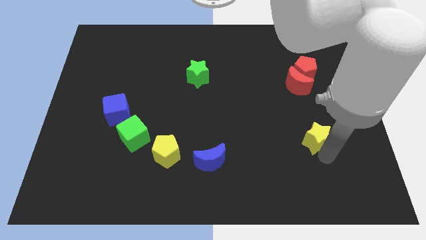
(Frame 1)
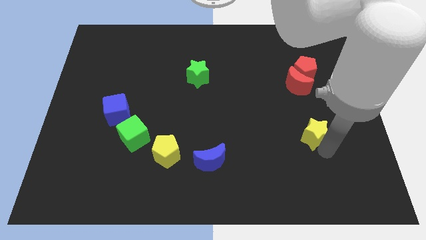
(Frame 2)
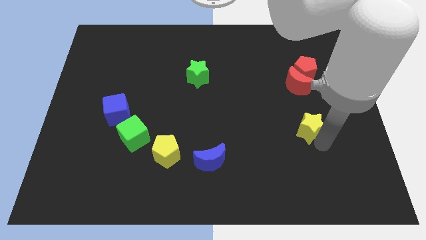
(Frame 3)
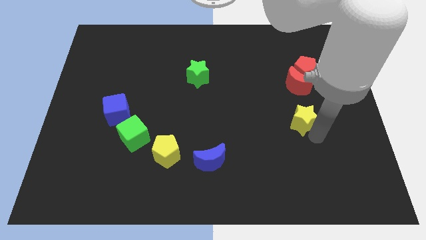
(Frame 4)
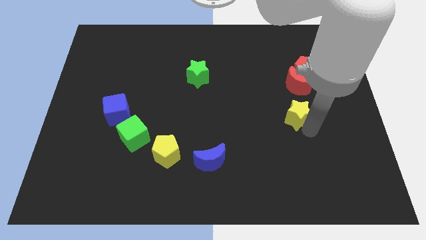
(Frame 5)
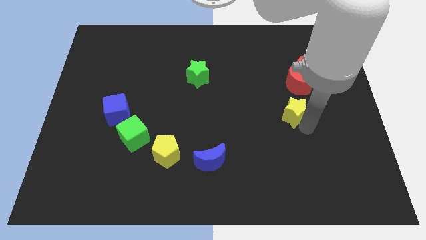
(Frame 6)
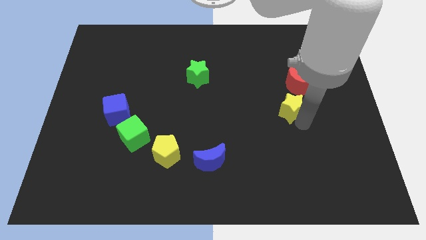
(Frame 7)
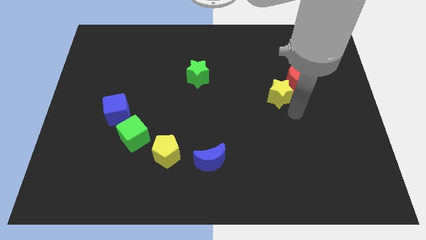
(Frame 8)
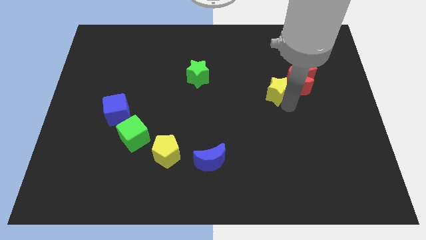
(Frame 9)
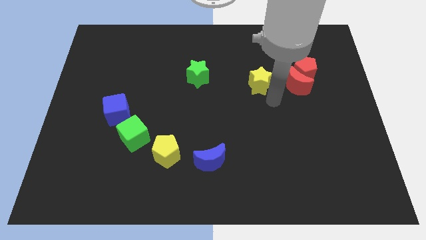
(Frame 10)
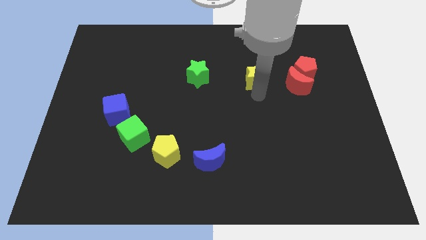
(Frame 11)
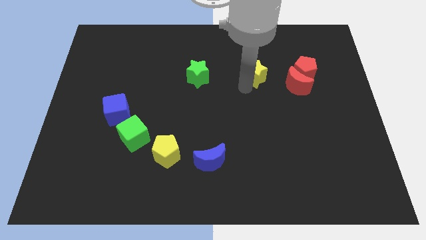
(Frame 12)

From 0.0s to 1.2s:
place yellow star to the left of red moon

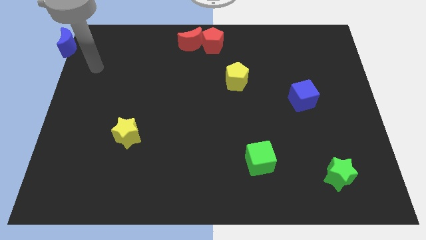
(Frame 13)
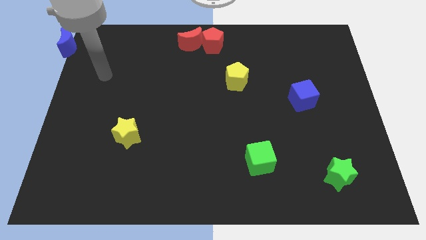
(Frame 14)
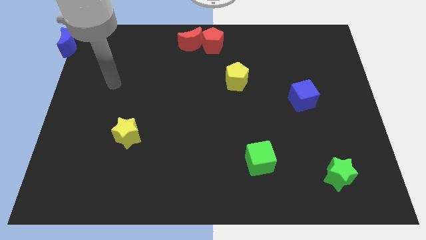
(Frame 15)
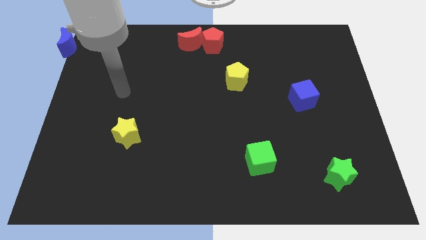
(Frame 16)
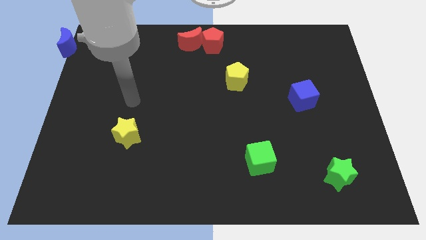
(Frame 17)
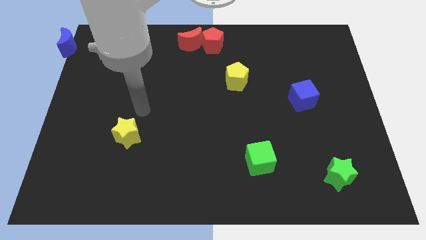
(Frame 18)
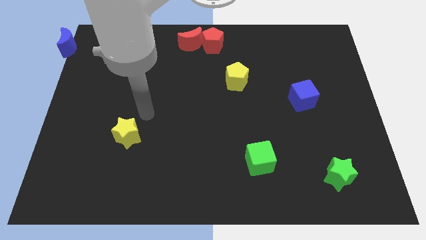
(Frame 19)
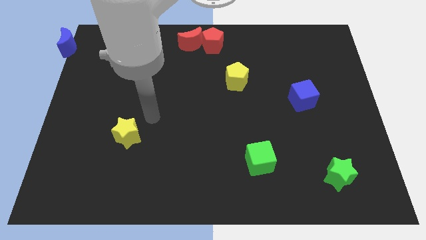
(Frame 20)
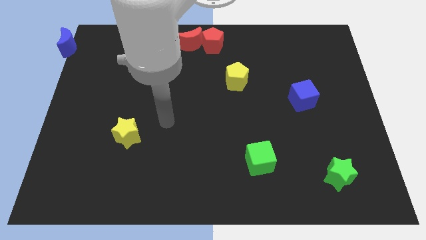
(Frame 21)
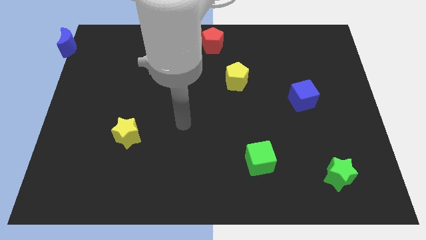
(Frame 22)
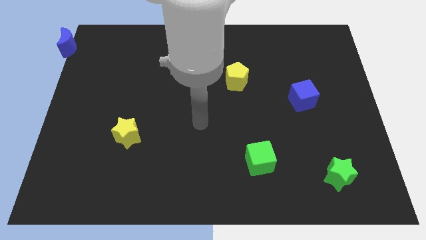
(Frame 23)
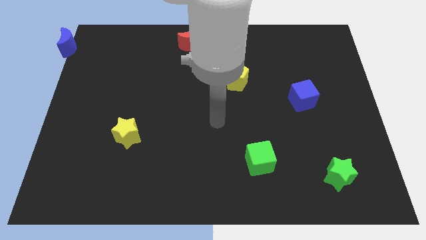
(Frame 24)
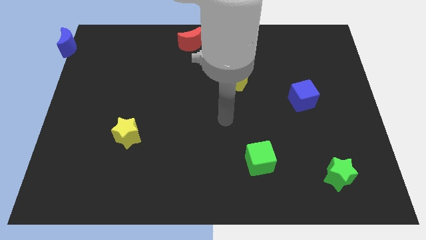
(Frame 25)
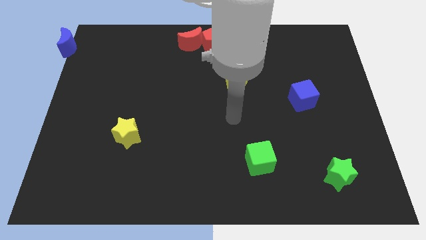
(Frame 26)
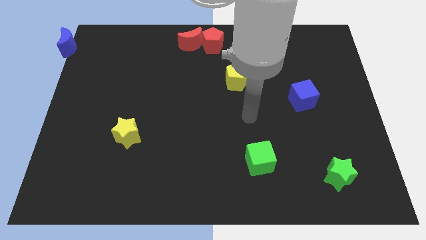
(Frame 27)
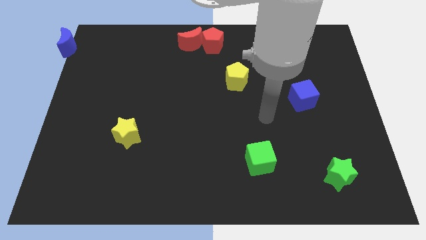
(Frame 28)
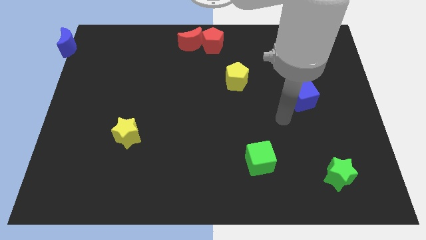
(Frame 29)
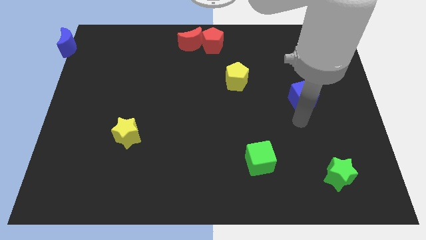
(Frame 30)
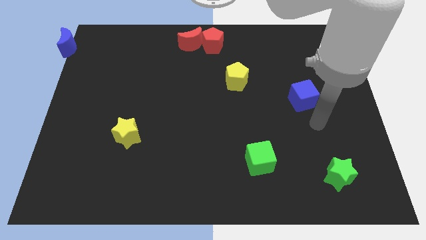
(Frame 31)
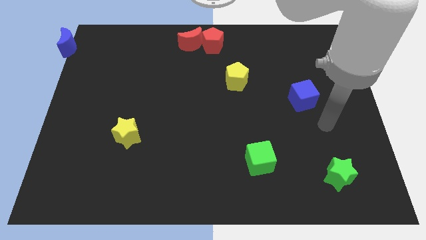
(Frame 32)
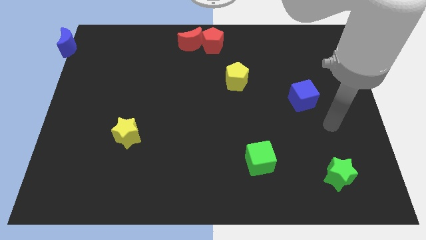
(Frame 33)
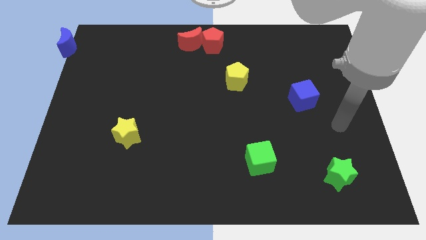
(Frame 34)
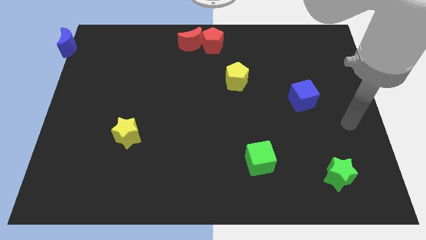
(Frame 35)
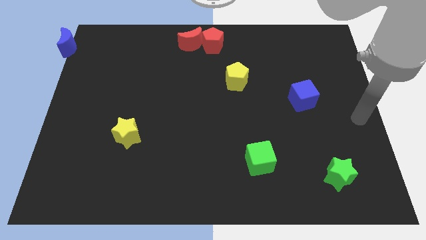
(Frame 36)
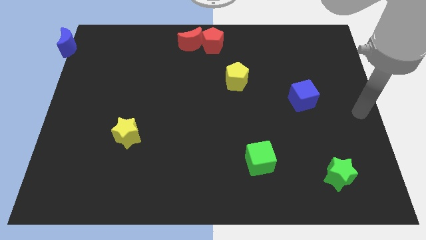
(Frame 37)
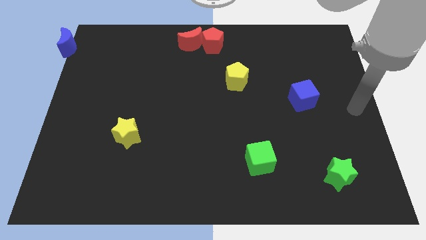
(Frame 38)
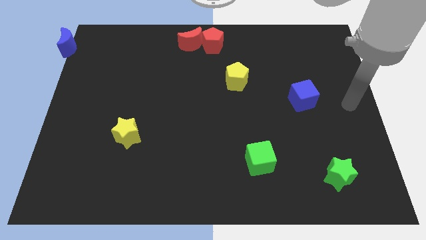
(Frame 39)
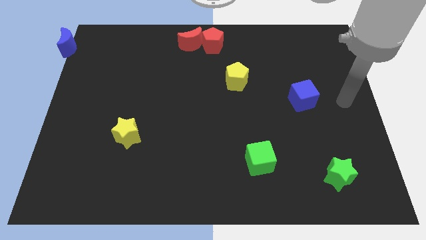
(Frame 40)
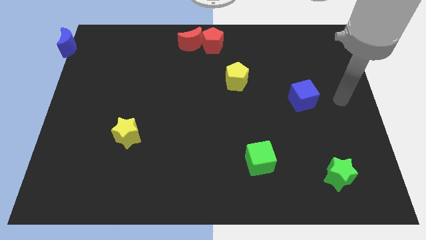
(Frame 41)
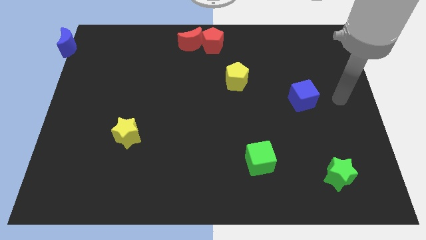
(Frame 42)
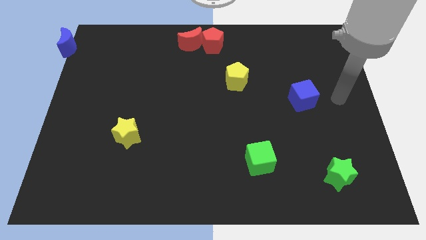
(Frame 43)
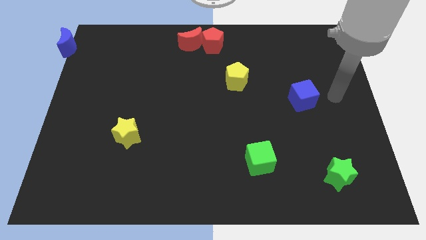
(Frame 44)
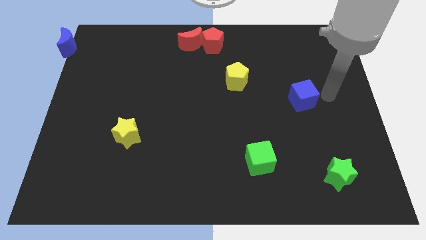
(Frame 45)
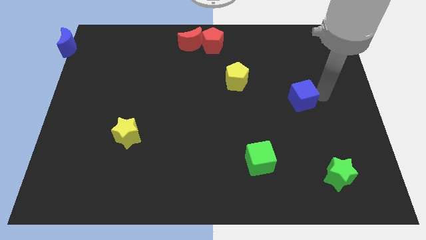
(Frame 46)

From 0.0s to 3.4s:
move your arm towards the blue cube

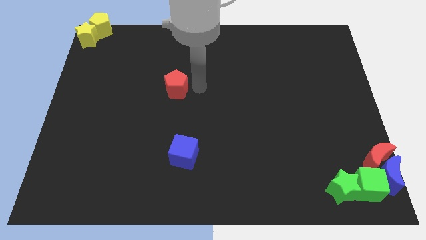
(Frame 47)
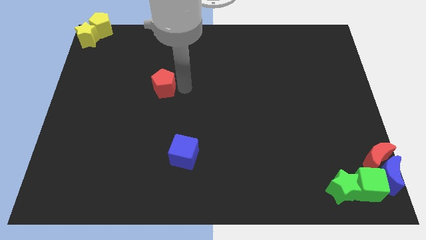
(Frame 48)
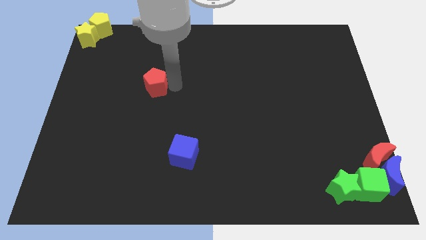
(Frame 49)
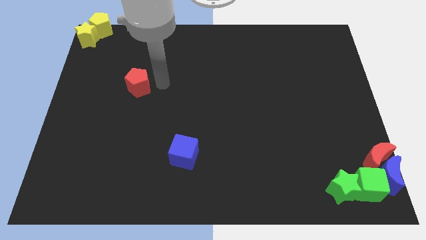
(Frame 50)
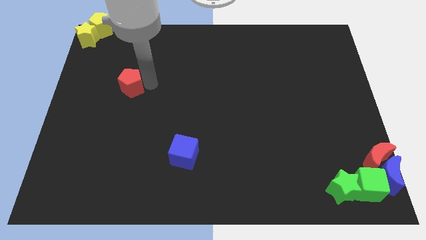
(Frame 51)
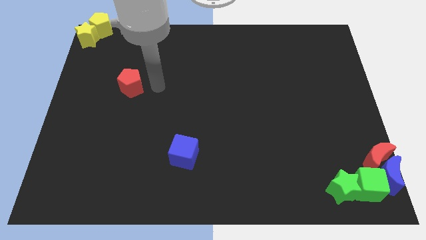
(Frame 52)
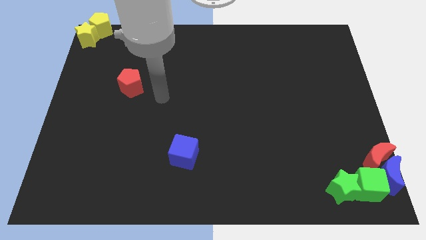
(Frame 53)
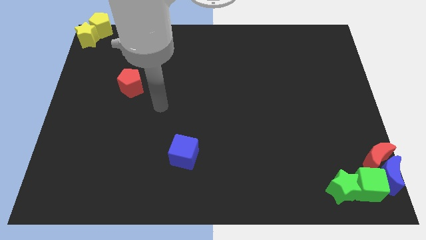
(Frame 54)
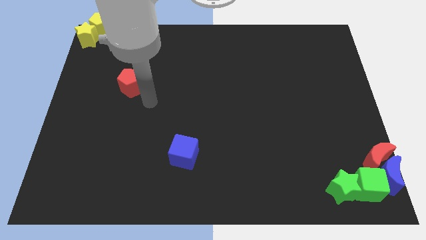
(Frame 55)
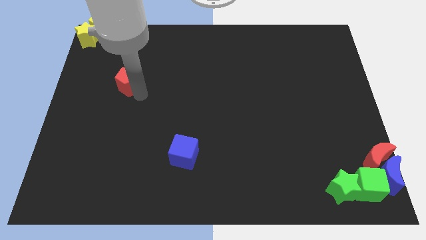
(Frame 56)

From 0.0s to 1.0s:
push the red pentagon towards the yellow blocks

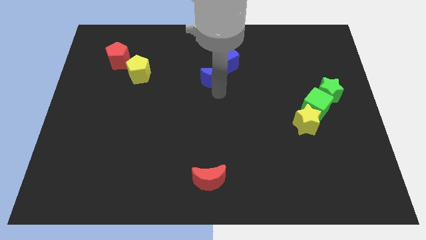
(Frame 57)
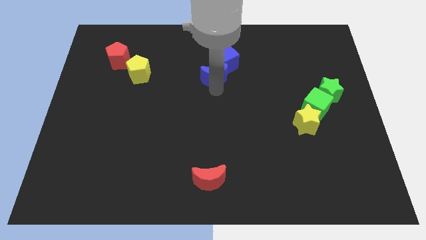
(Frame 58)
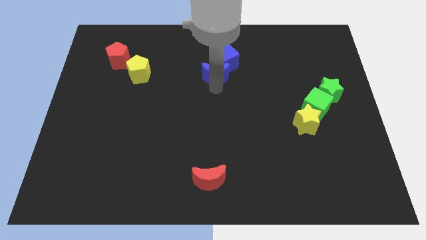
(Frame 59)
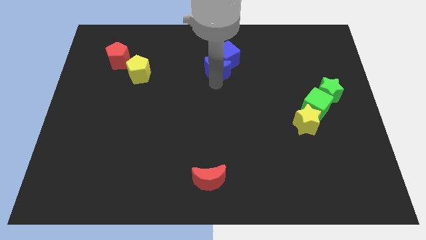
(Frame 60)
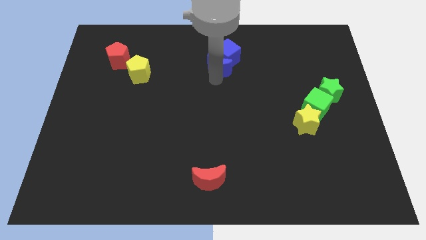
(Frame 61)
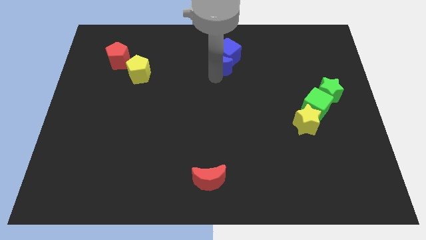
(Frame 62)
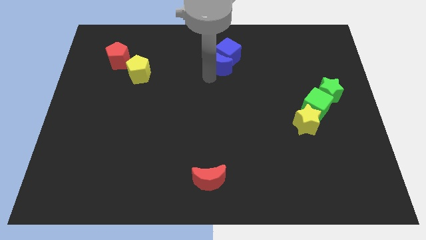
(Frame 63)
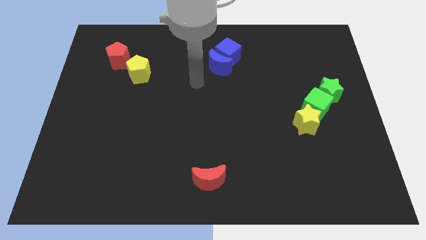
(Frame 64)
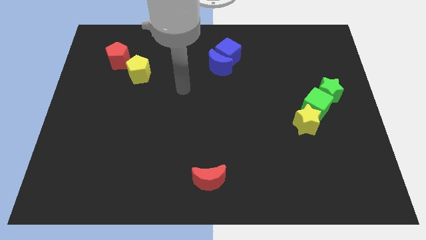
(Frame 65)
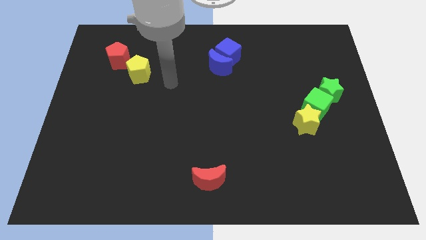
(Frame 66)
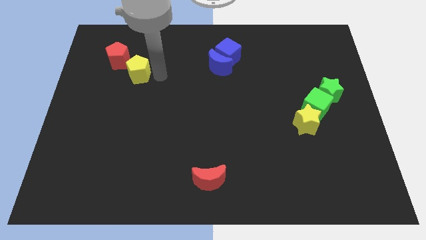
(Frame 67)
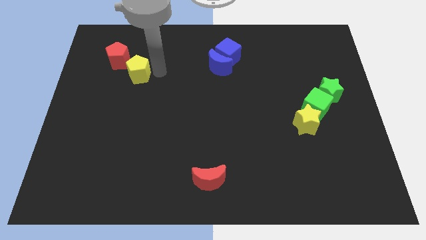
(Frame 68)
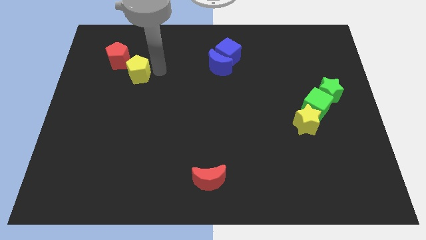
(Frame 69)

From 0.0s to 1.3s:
move your arm to the yellow pentagon

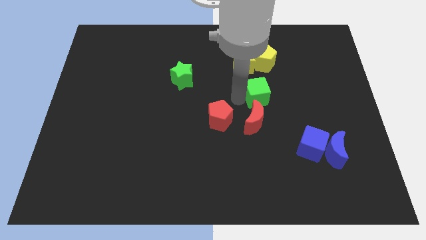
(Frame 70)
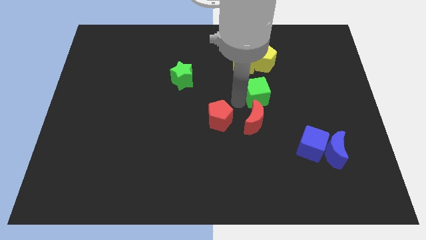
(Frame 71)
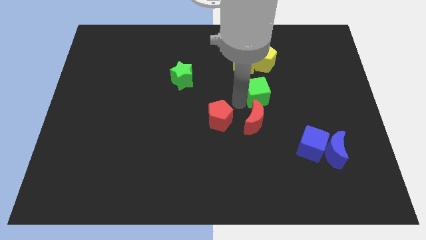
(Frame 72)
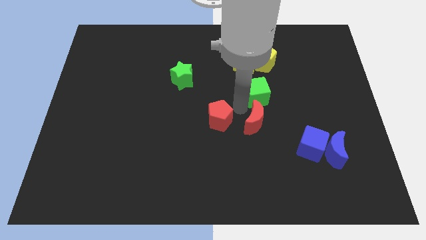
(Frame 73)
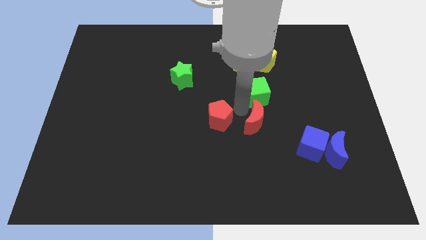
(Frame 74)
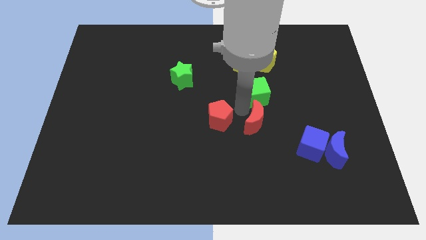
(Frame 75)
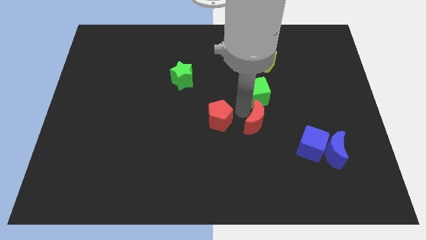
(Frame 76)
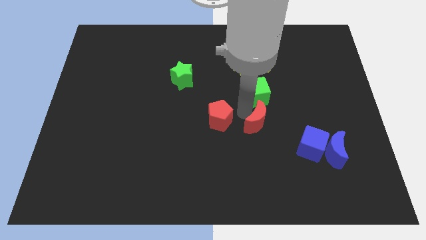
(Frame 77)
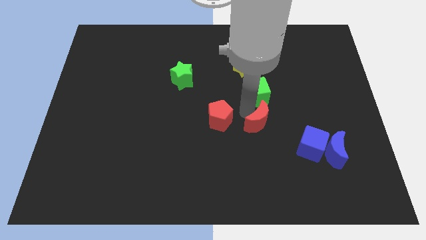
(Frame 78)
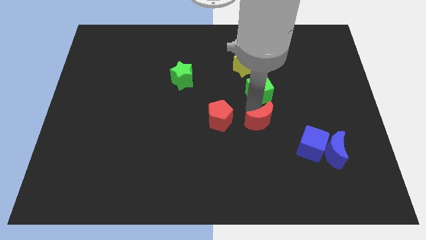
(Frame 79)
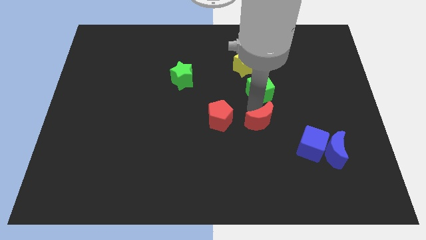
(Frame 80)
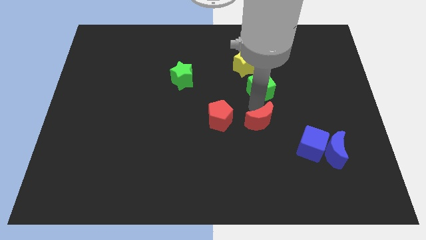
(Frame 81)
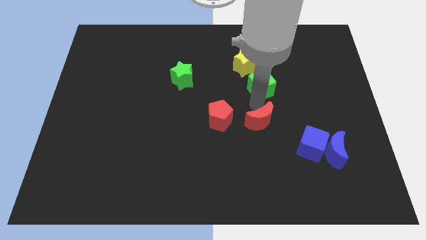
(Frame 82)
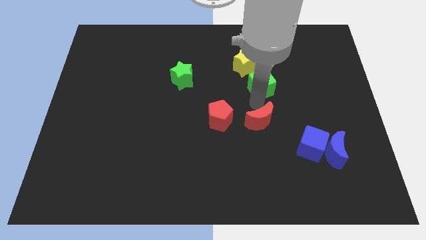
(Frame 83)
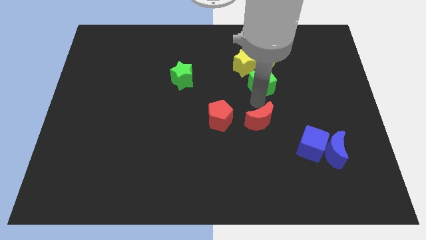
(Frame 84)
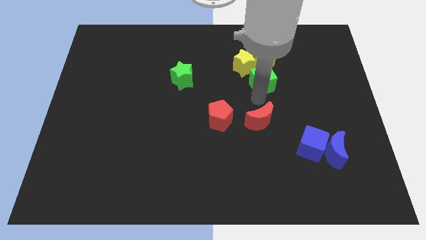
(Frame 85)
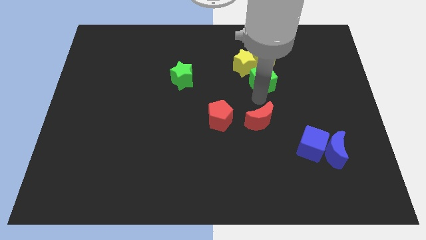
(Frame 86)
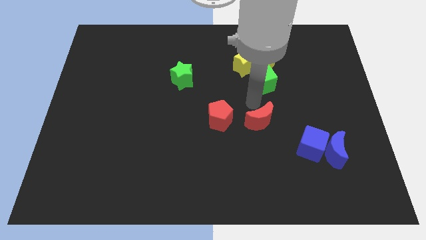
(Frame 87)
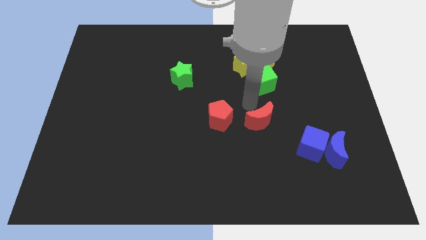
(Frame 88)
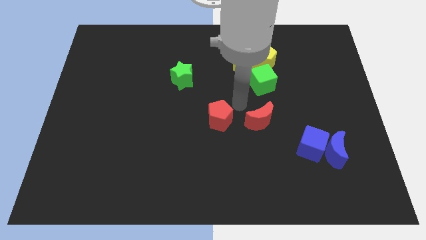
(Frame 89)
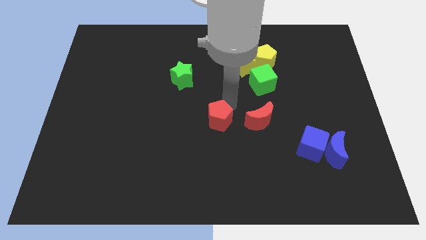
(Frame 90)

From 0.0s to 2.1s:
move green cube into the yellow pentagon
